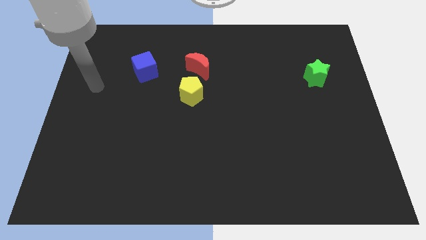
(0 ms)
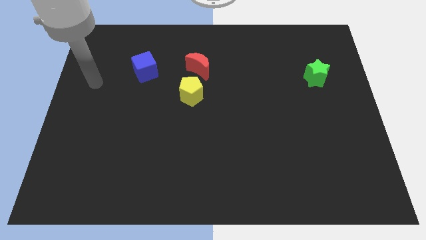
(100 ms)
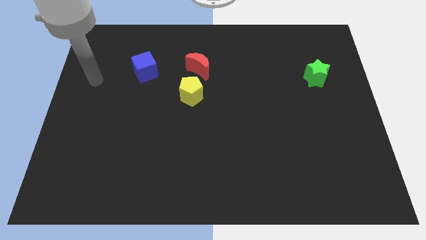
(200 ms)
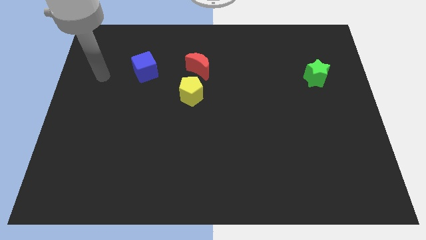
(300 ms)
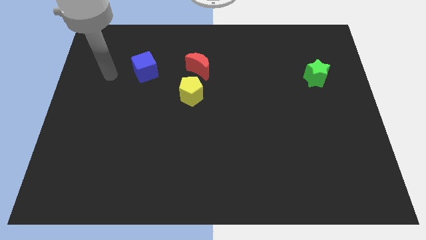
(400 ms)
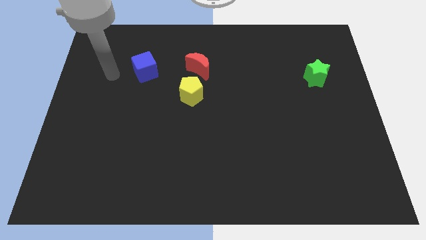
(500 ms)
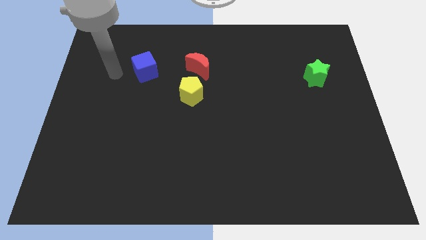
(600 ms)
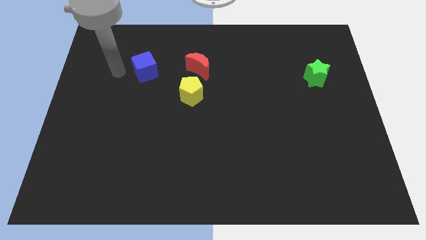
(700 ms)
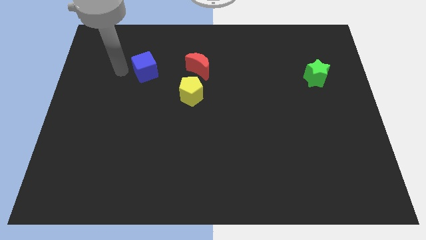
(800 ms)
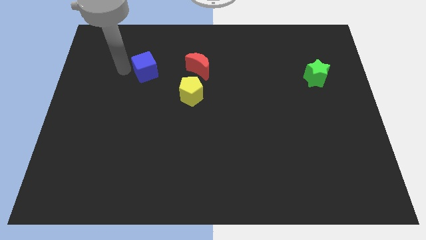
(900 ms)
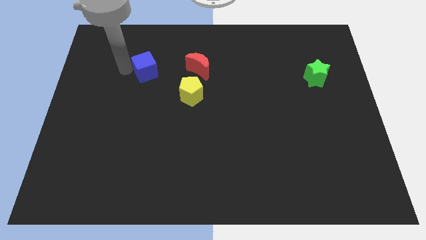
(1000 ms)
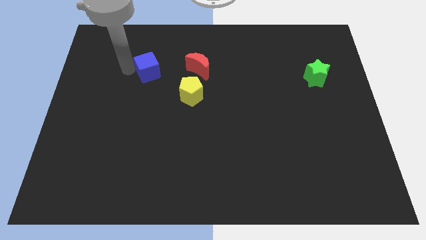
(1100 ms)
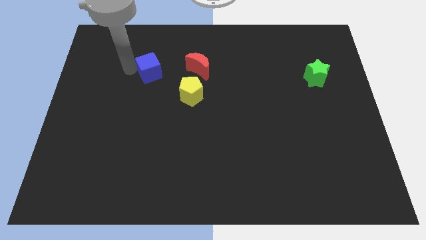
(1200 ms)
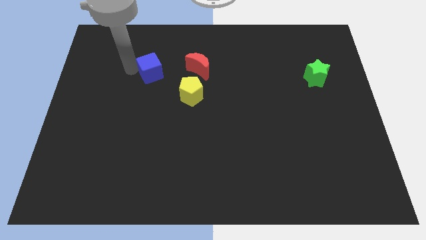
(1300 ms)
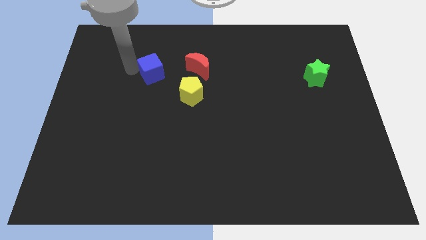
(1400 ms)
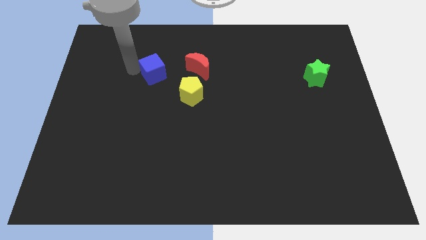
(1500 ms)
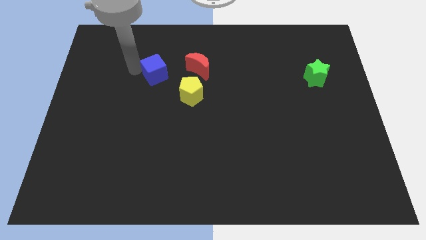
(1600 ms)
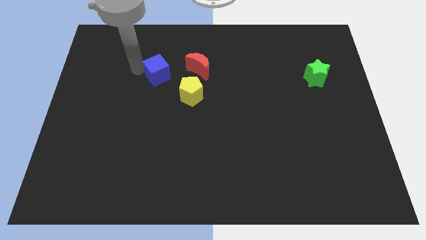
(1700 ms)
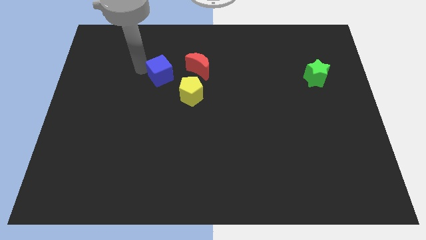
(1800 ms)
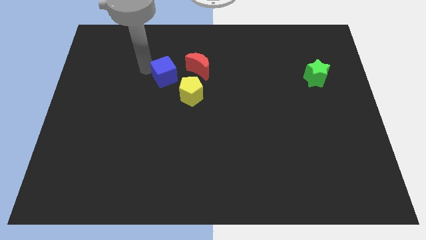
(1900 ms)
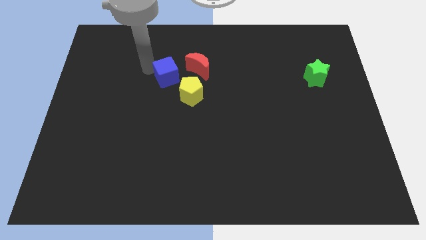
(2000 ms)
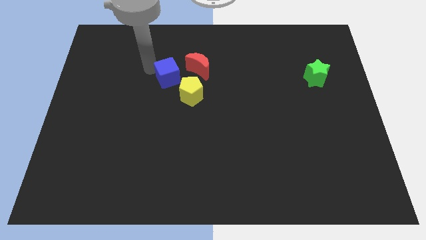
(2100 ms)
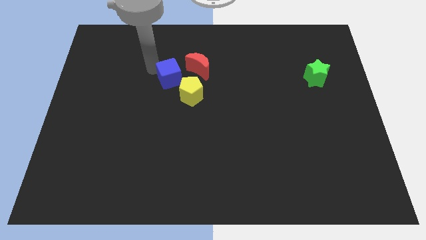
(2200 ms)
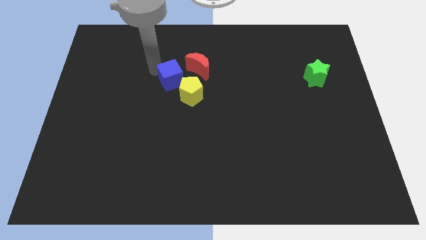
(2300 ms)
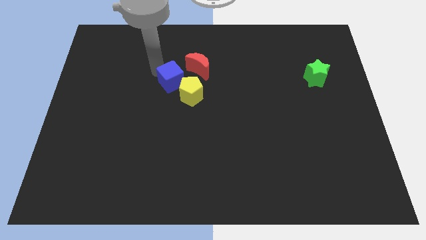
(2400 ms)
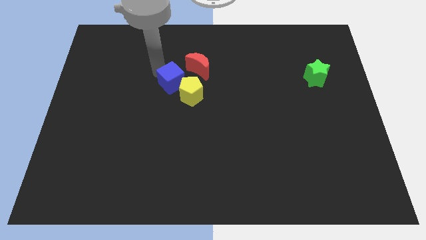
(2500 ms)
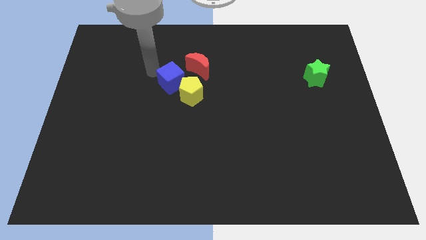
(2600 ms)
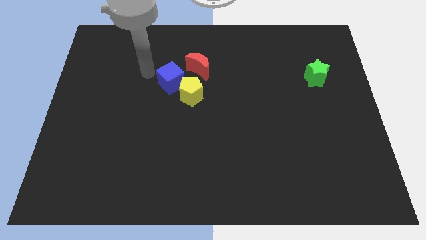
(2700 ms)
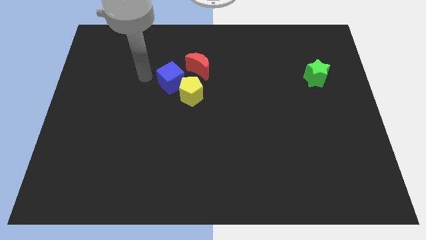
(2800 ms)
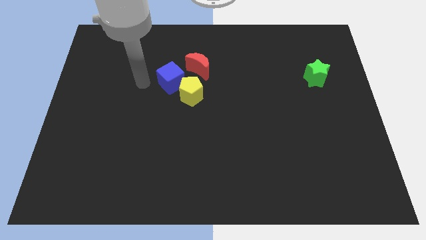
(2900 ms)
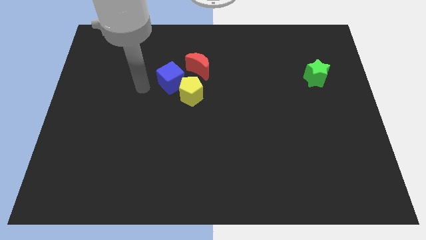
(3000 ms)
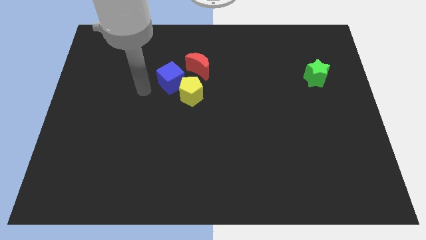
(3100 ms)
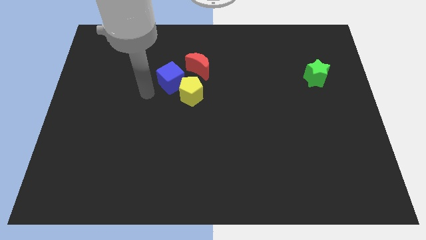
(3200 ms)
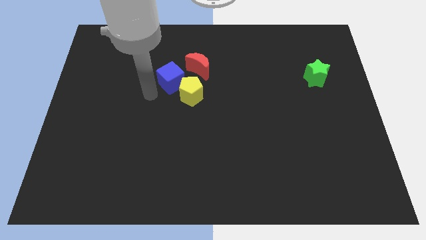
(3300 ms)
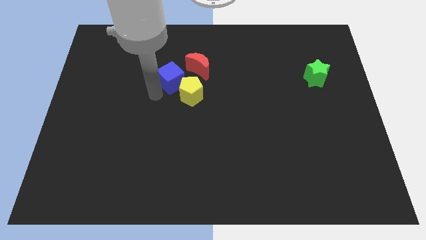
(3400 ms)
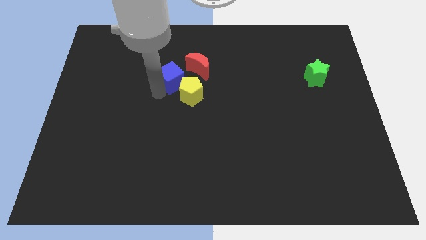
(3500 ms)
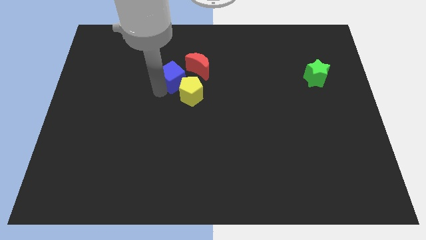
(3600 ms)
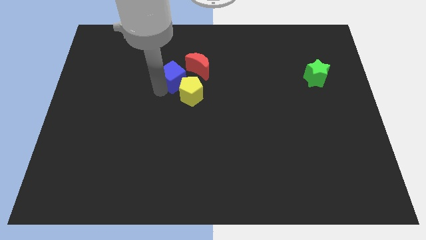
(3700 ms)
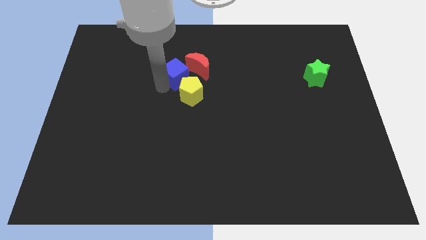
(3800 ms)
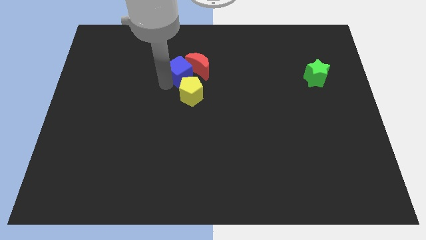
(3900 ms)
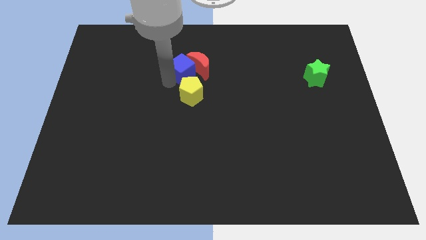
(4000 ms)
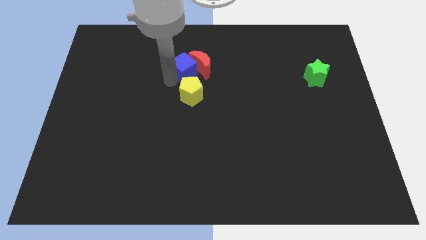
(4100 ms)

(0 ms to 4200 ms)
push the blue cube to the red moon

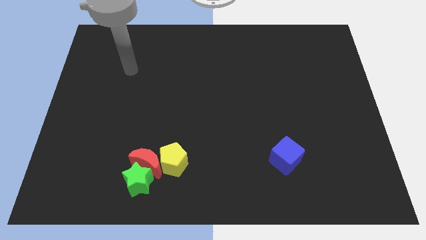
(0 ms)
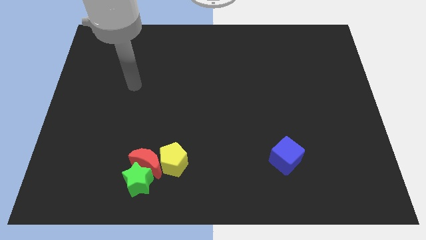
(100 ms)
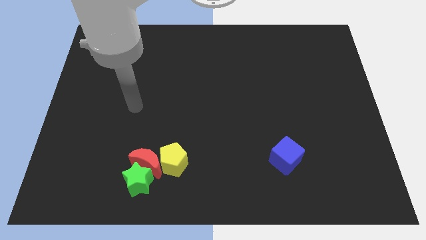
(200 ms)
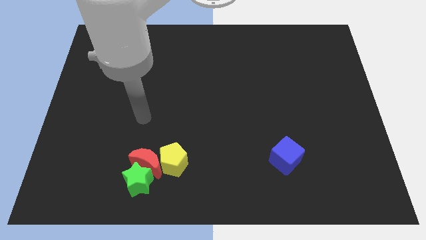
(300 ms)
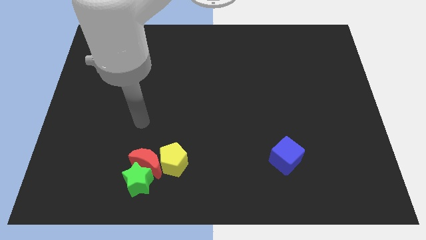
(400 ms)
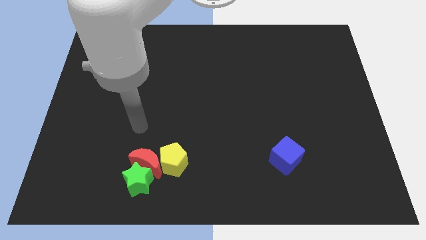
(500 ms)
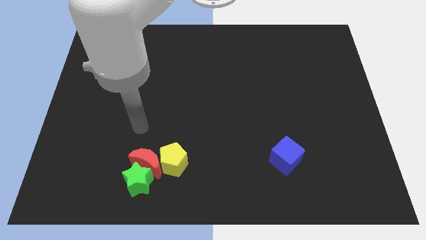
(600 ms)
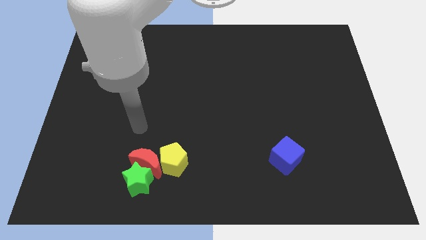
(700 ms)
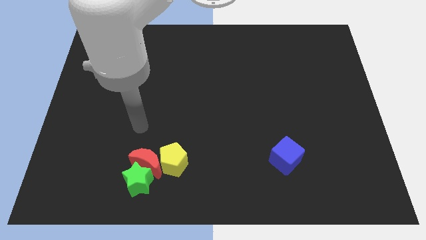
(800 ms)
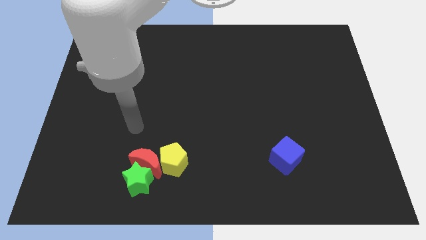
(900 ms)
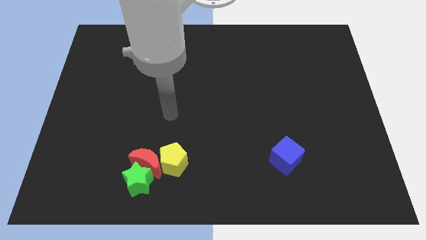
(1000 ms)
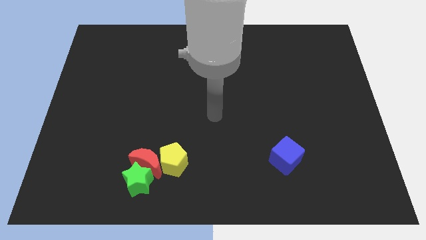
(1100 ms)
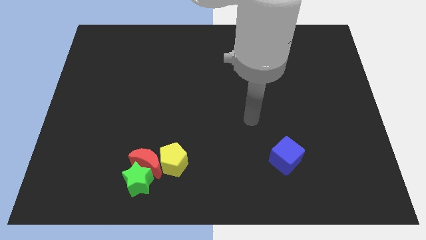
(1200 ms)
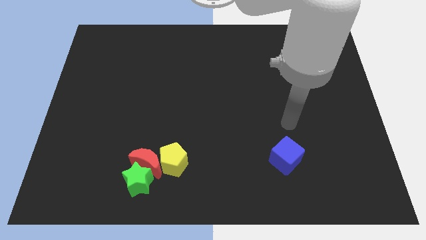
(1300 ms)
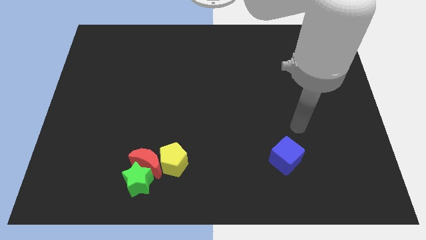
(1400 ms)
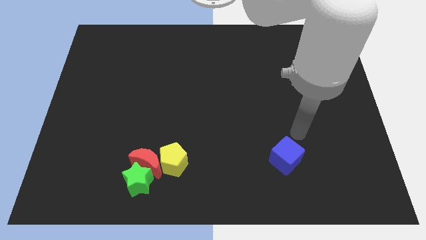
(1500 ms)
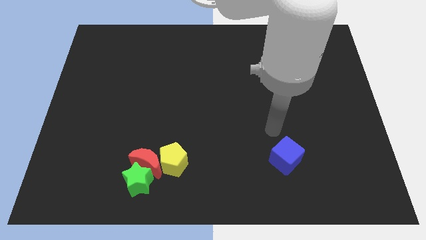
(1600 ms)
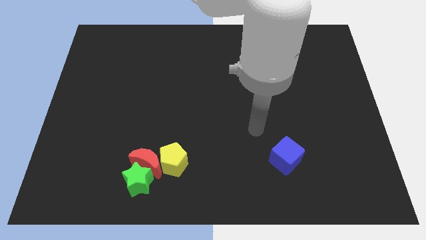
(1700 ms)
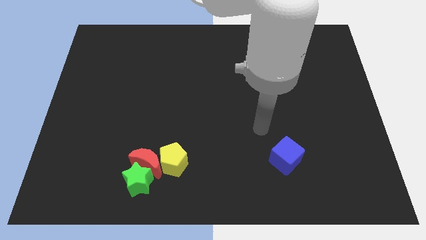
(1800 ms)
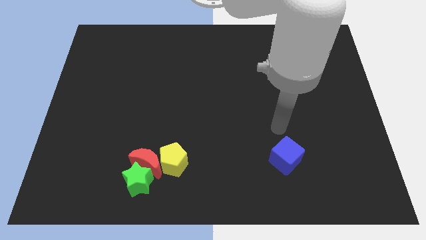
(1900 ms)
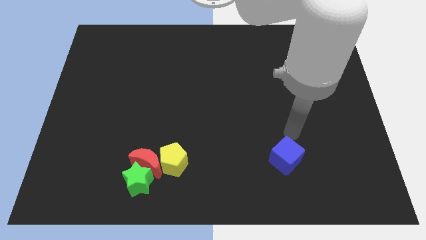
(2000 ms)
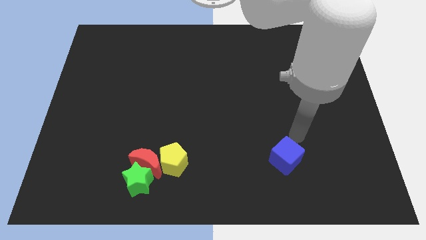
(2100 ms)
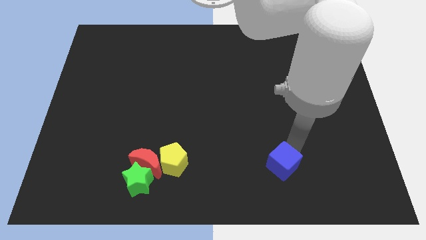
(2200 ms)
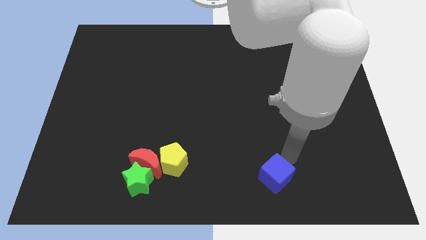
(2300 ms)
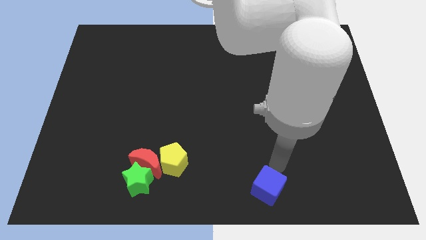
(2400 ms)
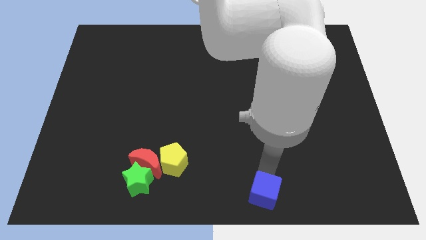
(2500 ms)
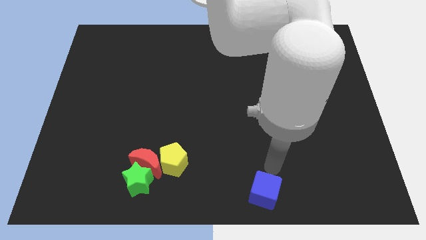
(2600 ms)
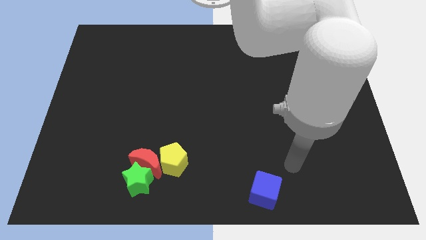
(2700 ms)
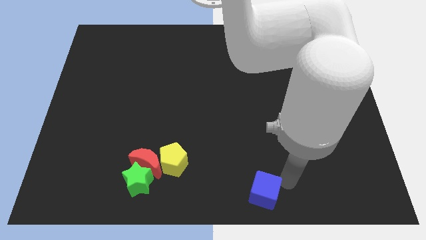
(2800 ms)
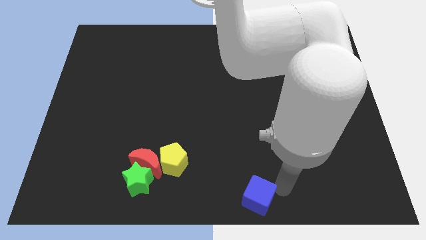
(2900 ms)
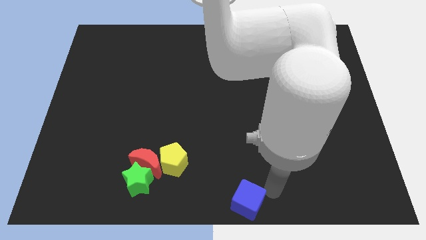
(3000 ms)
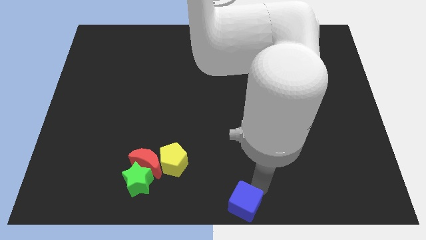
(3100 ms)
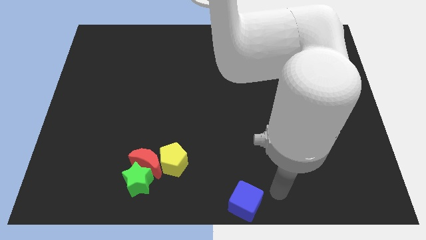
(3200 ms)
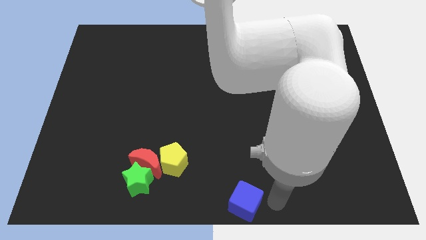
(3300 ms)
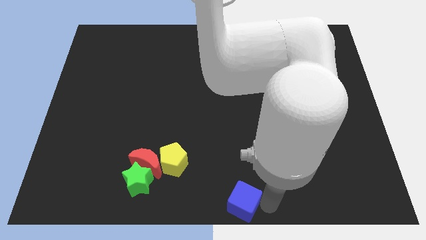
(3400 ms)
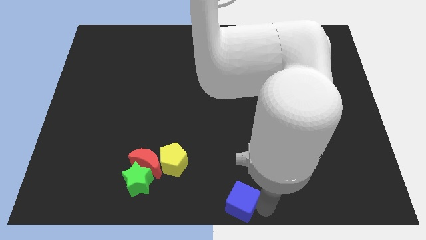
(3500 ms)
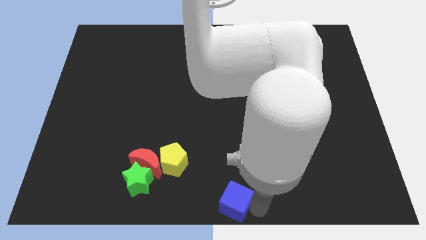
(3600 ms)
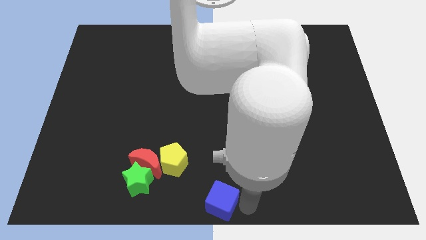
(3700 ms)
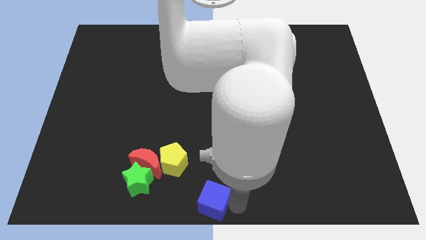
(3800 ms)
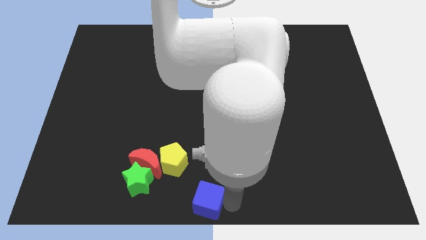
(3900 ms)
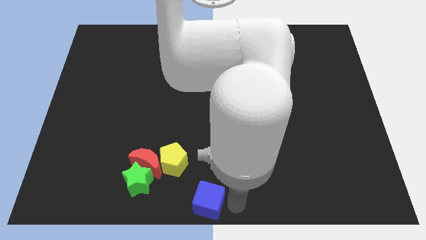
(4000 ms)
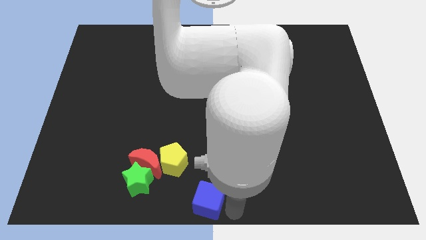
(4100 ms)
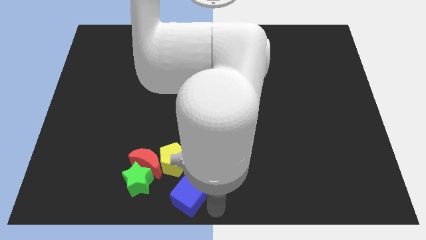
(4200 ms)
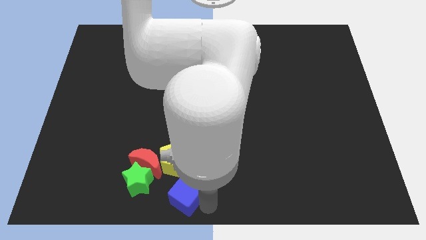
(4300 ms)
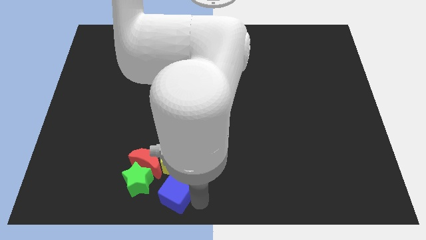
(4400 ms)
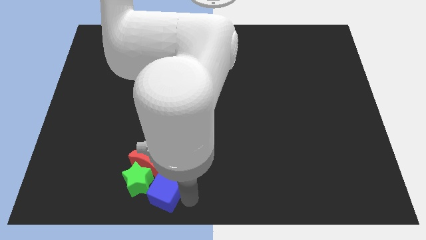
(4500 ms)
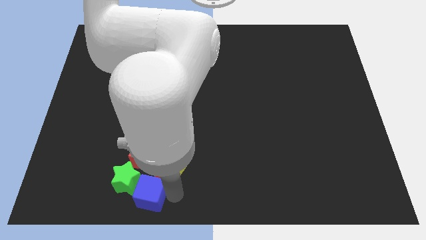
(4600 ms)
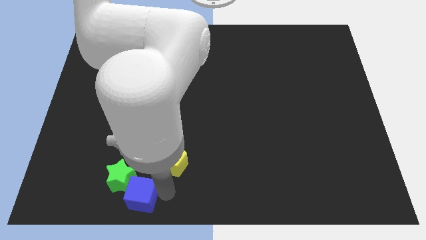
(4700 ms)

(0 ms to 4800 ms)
put the cube next to the star
